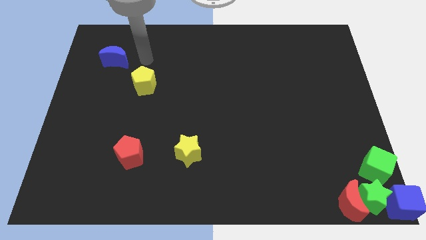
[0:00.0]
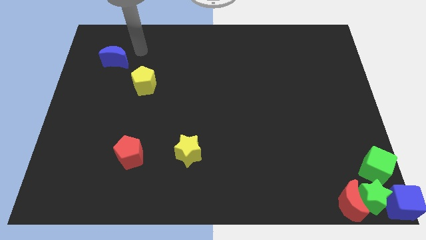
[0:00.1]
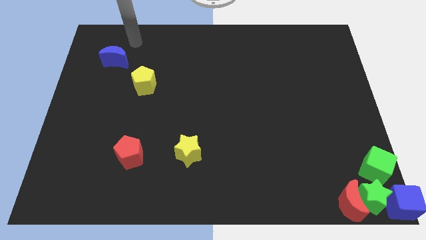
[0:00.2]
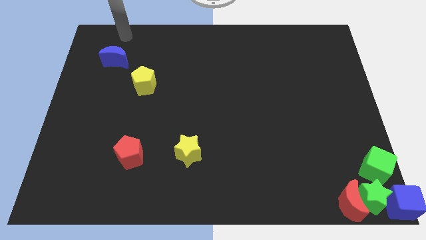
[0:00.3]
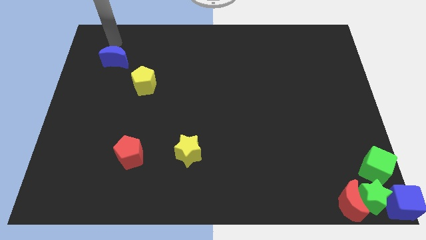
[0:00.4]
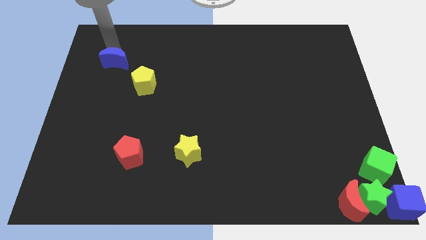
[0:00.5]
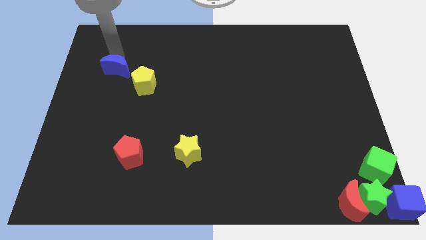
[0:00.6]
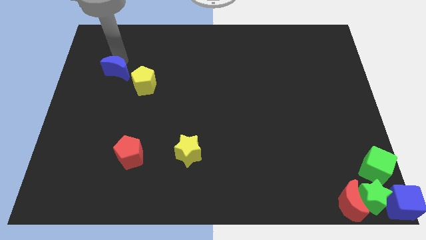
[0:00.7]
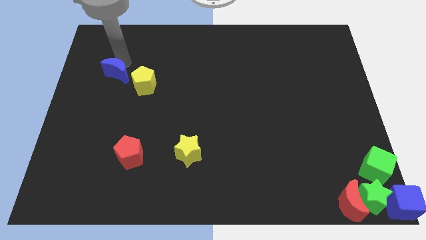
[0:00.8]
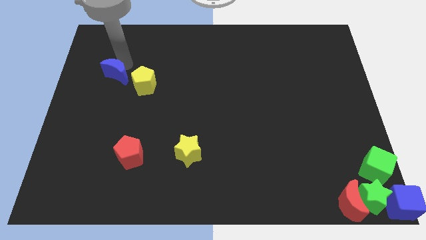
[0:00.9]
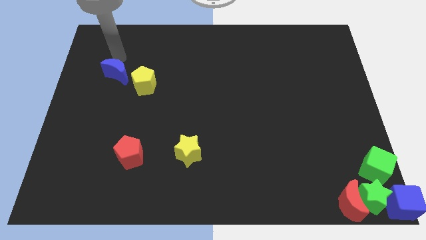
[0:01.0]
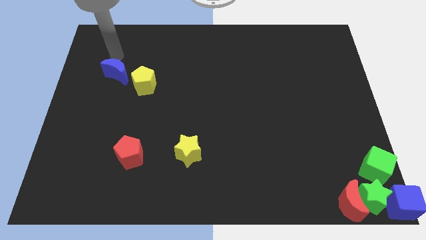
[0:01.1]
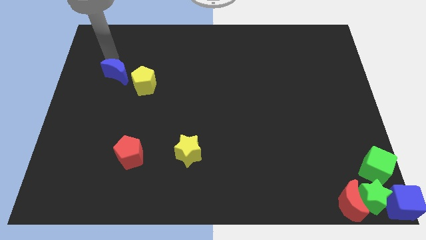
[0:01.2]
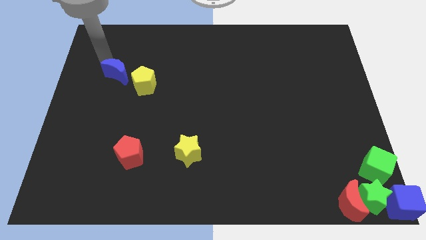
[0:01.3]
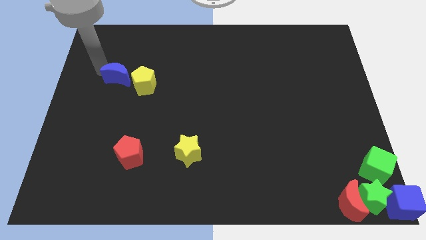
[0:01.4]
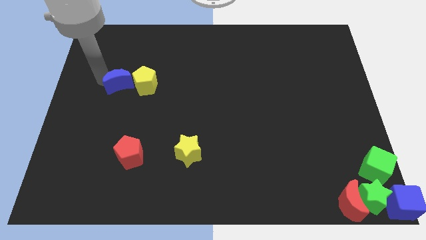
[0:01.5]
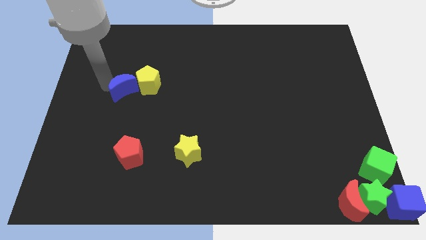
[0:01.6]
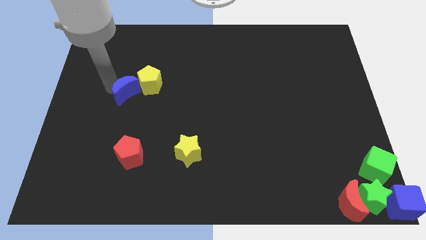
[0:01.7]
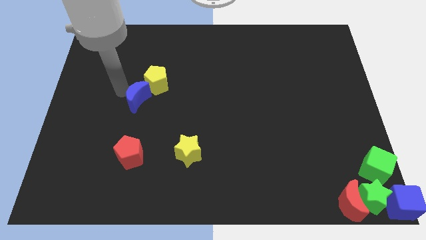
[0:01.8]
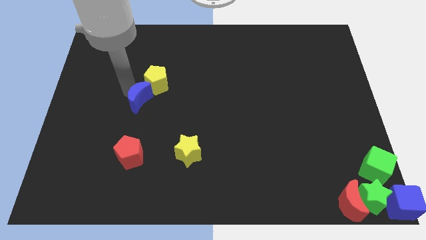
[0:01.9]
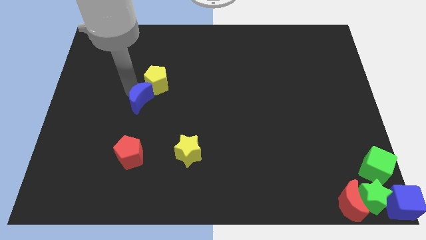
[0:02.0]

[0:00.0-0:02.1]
slide the blue moon diagonally top right to the red pentagon

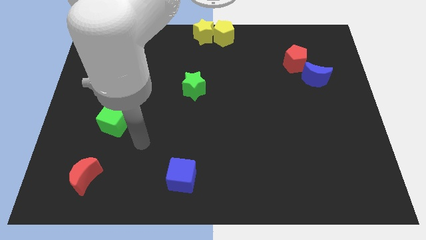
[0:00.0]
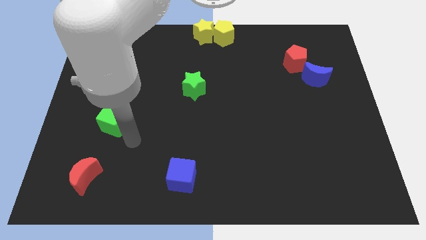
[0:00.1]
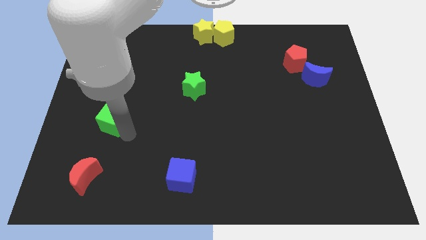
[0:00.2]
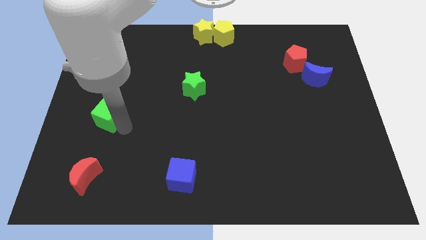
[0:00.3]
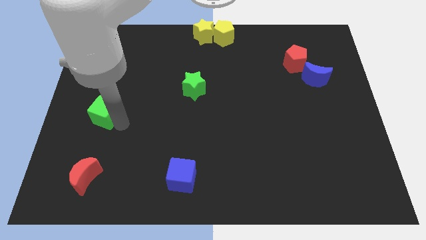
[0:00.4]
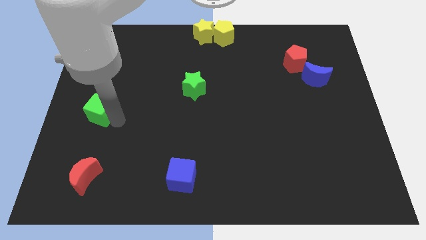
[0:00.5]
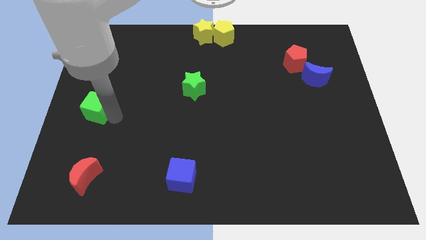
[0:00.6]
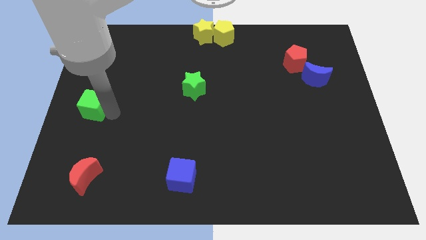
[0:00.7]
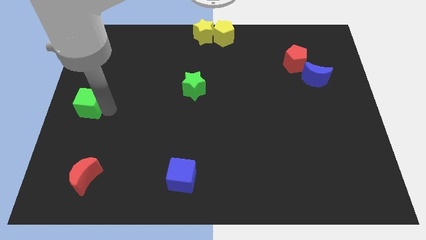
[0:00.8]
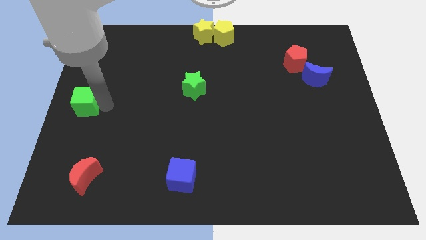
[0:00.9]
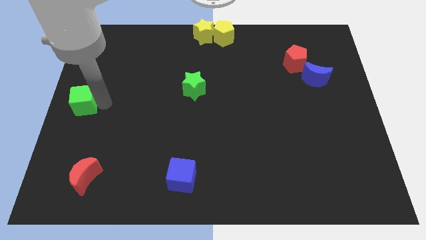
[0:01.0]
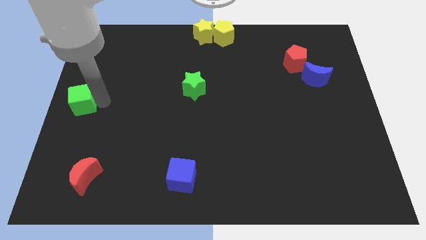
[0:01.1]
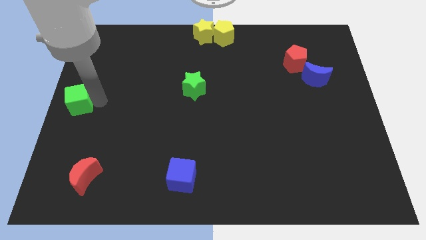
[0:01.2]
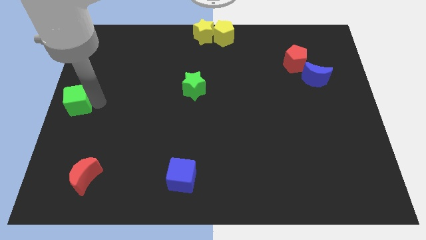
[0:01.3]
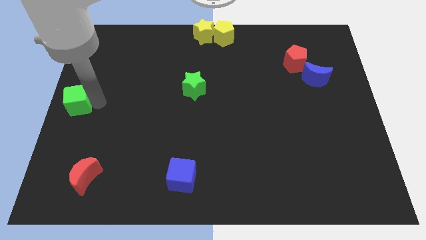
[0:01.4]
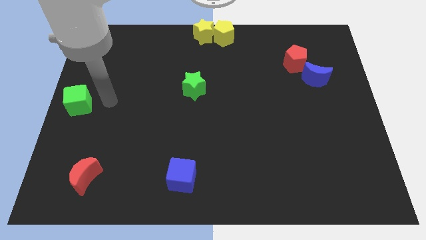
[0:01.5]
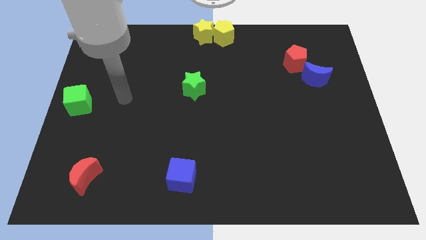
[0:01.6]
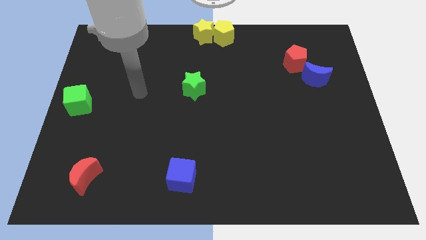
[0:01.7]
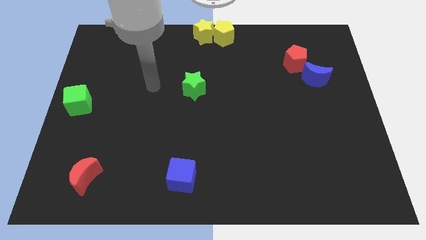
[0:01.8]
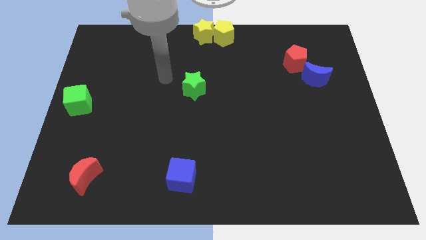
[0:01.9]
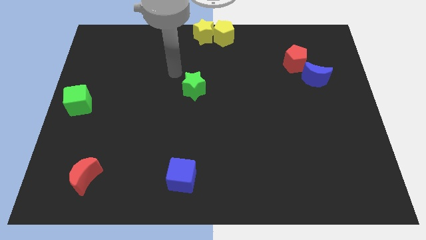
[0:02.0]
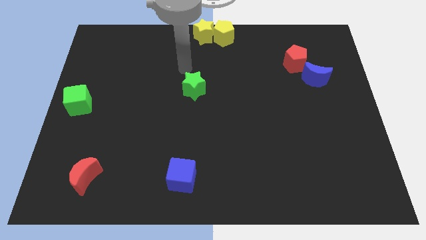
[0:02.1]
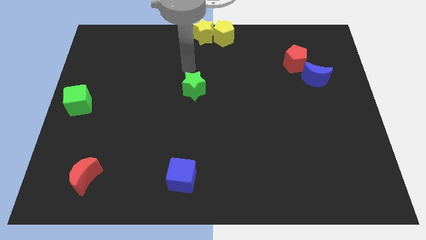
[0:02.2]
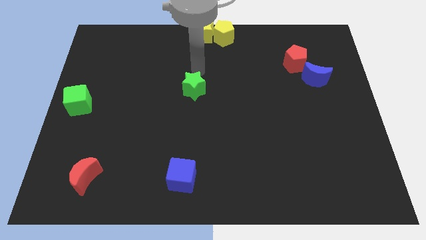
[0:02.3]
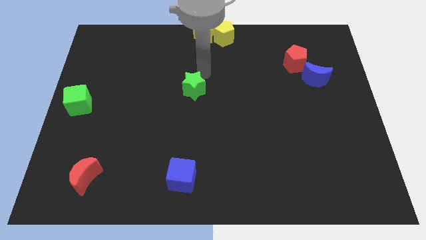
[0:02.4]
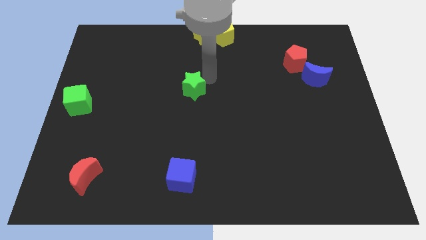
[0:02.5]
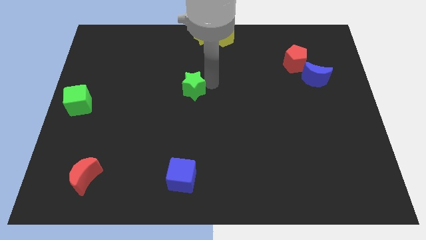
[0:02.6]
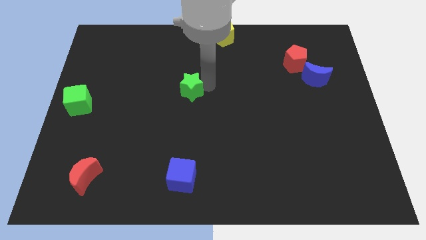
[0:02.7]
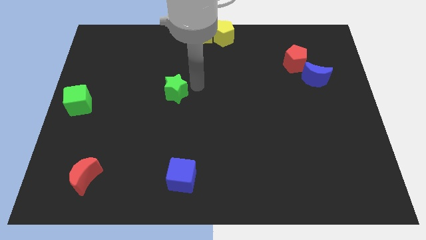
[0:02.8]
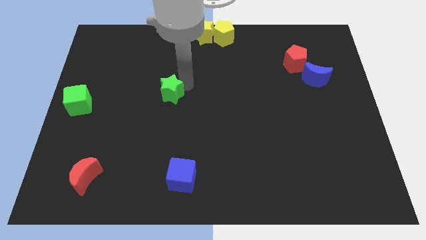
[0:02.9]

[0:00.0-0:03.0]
move the green cube to the center left of the board

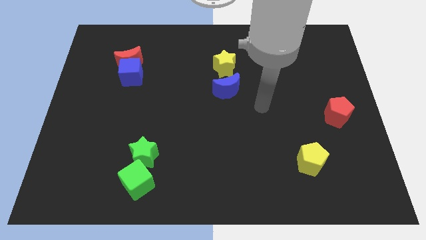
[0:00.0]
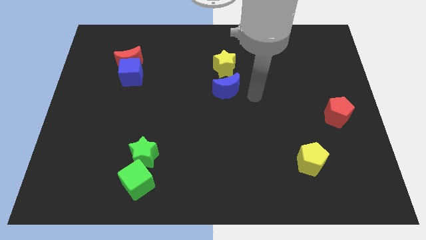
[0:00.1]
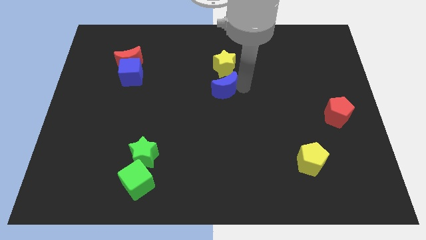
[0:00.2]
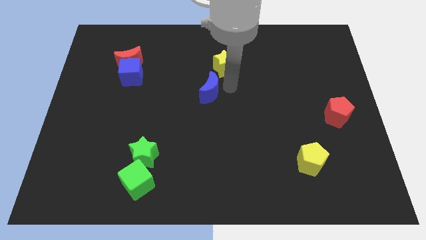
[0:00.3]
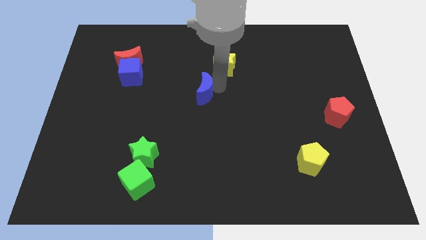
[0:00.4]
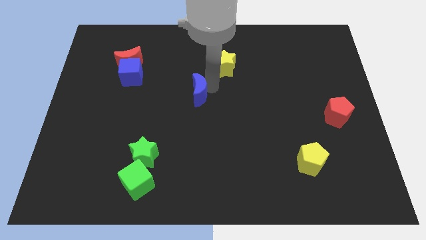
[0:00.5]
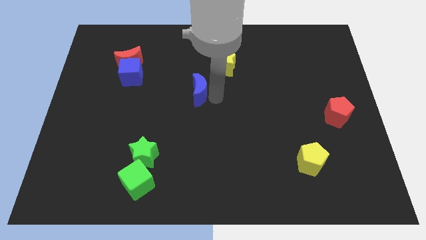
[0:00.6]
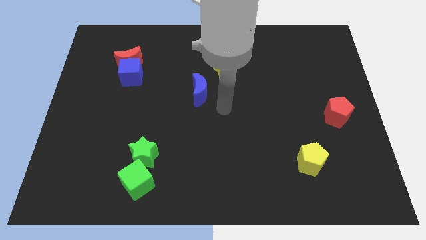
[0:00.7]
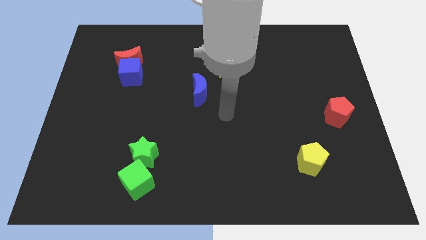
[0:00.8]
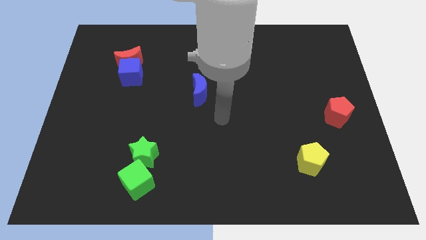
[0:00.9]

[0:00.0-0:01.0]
place blue moon to the bottom left of yellow star

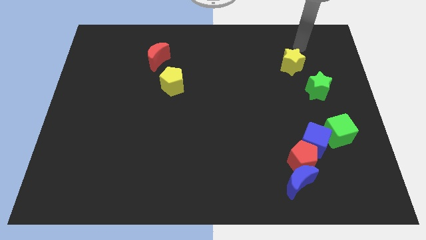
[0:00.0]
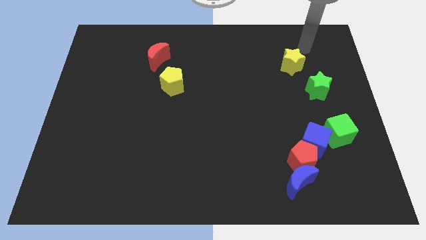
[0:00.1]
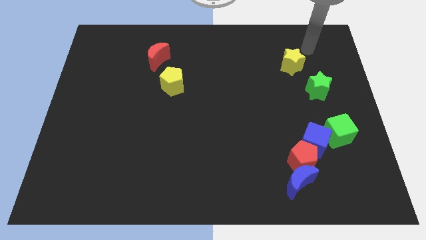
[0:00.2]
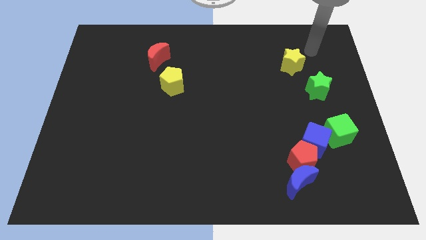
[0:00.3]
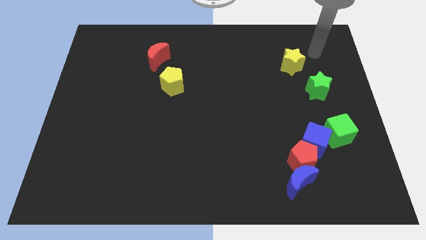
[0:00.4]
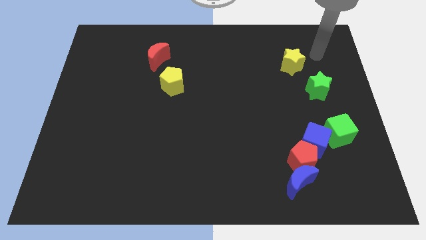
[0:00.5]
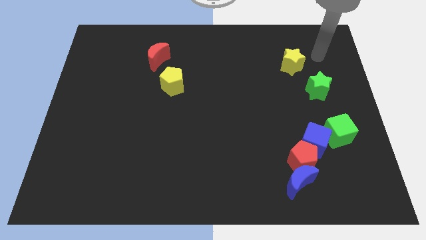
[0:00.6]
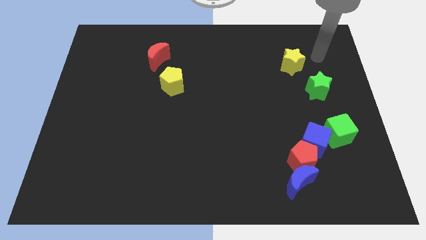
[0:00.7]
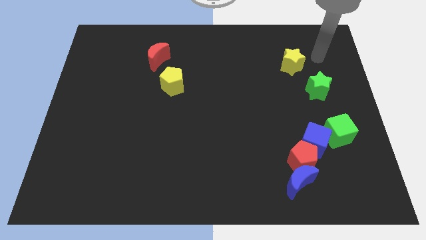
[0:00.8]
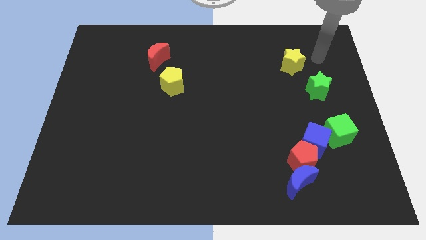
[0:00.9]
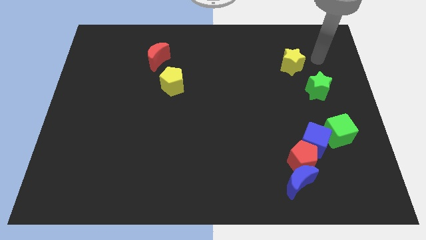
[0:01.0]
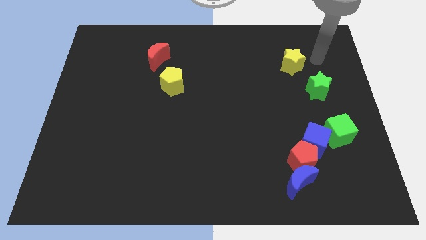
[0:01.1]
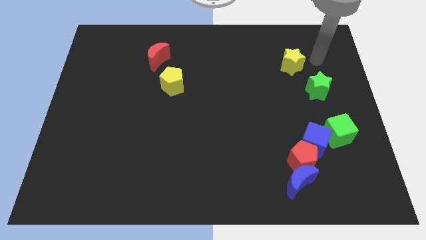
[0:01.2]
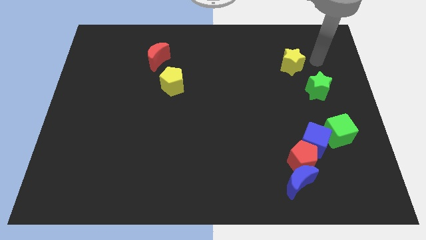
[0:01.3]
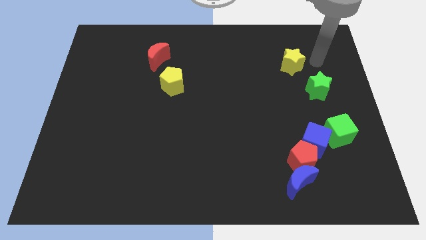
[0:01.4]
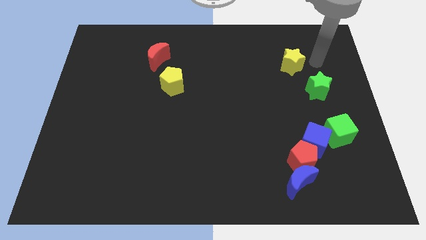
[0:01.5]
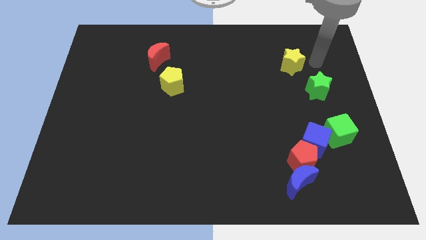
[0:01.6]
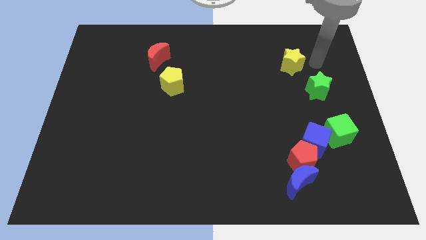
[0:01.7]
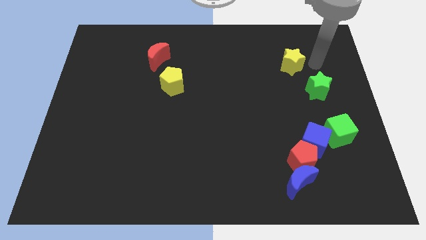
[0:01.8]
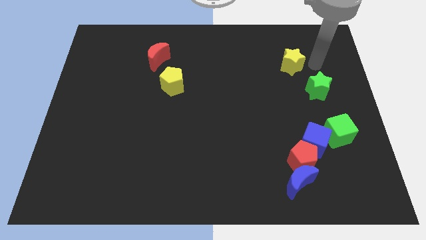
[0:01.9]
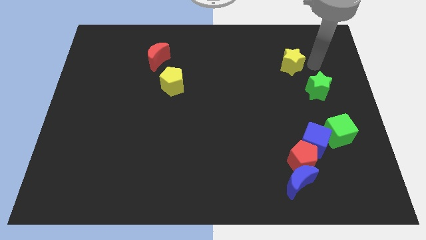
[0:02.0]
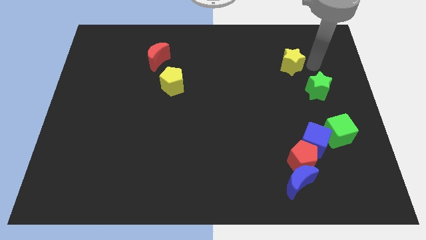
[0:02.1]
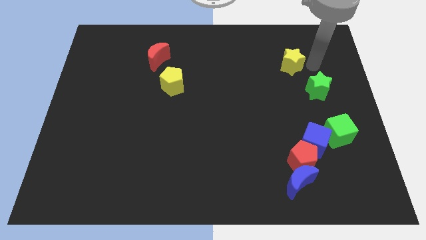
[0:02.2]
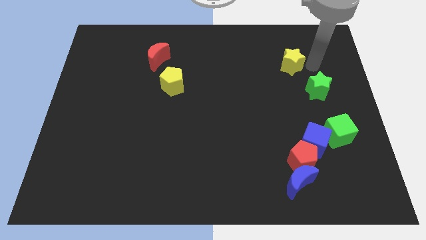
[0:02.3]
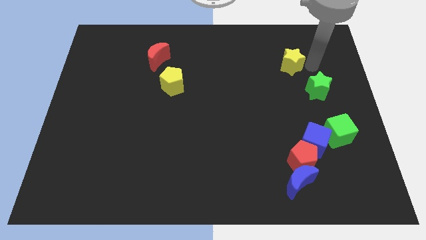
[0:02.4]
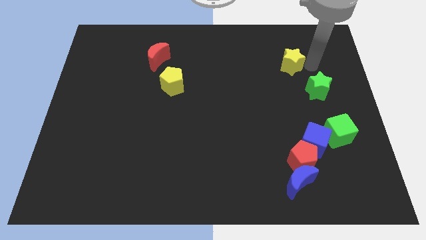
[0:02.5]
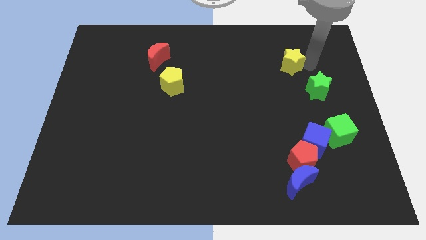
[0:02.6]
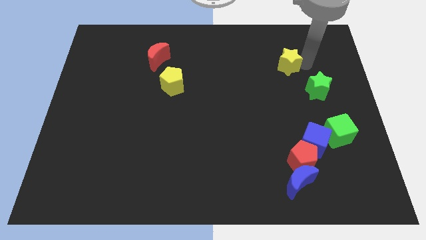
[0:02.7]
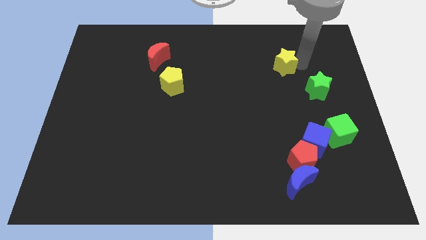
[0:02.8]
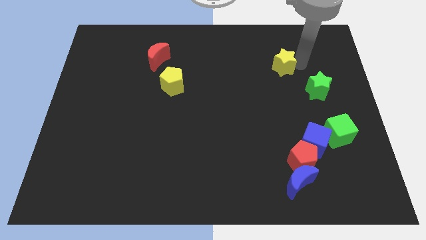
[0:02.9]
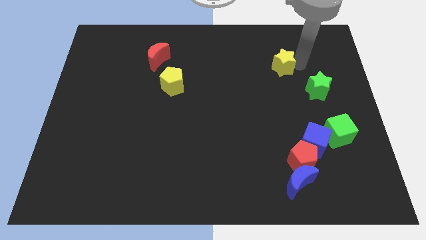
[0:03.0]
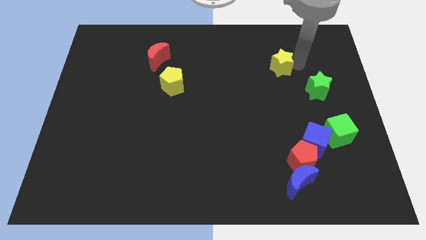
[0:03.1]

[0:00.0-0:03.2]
push the yellow star slightly to the left
